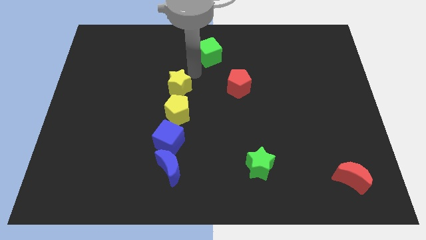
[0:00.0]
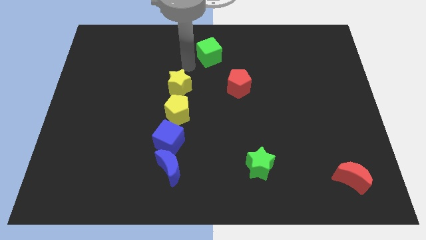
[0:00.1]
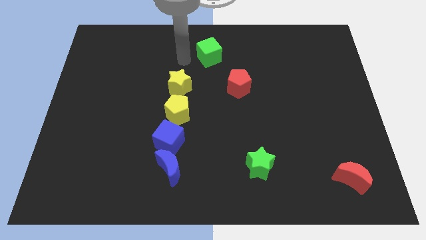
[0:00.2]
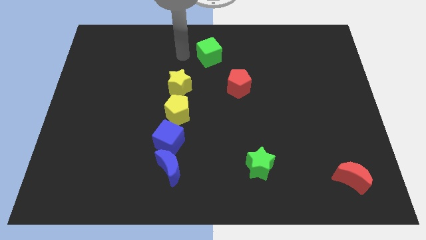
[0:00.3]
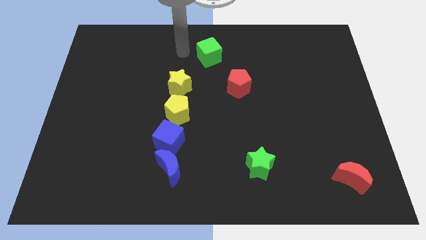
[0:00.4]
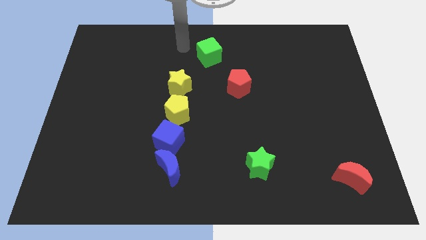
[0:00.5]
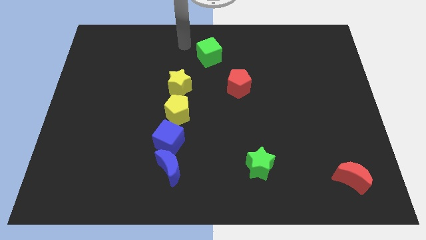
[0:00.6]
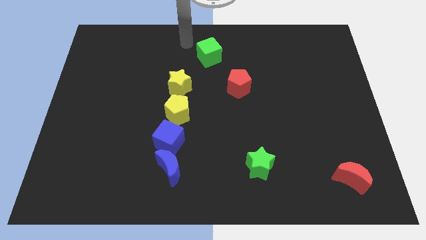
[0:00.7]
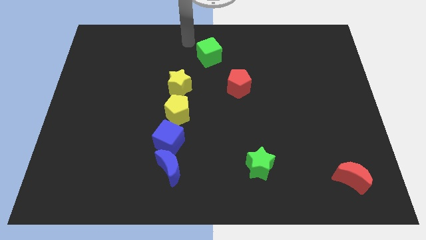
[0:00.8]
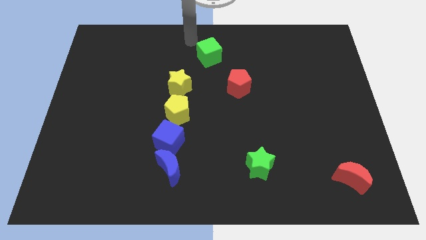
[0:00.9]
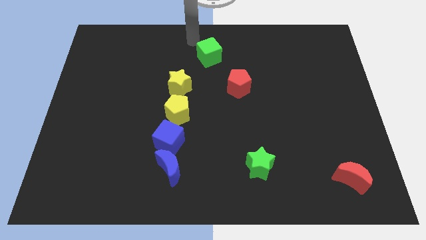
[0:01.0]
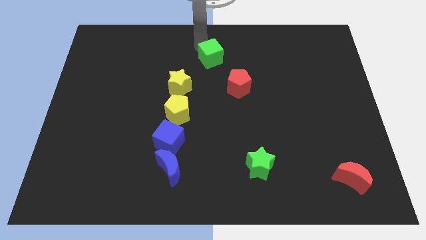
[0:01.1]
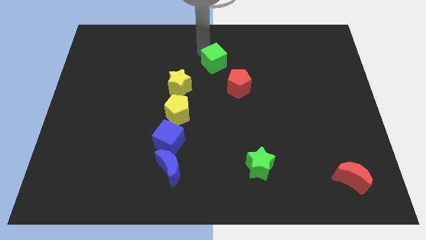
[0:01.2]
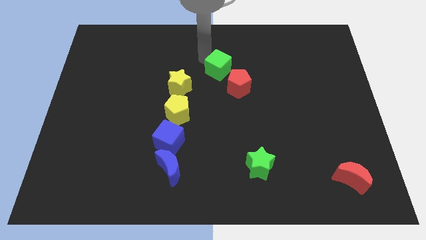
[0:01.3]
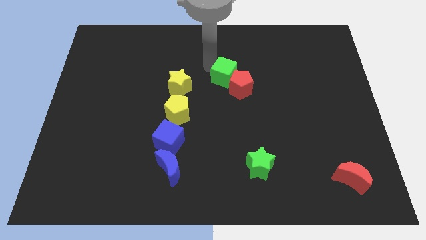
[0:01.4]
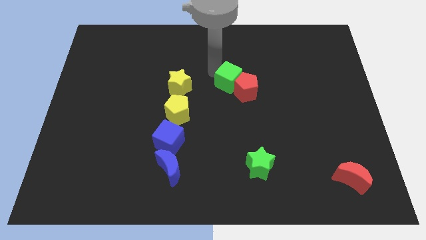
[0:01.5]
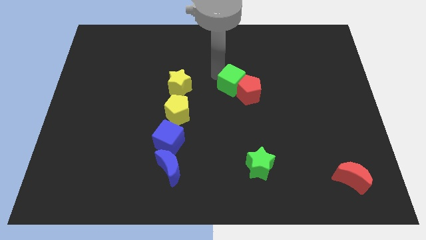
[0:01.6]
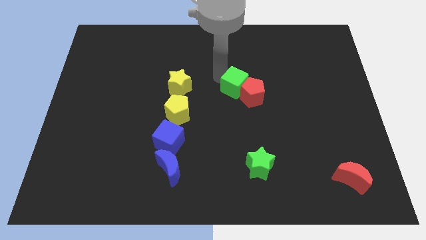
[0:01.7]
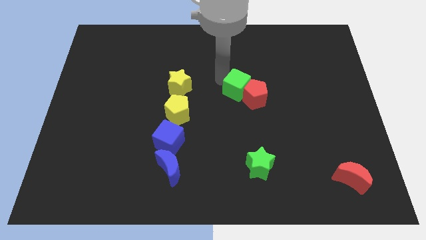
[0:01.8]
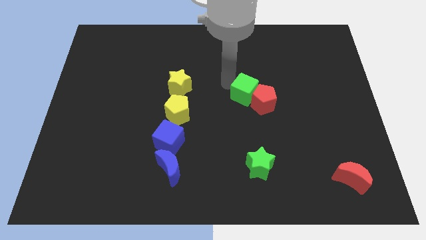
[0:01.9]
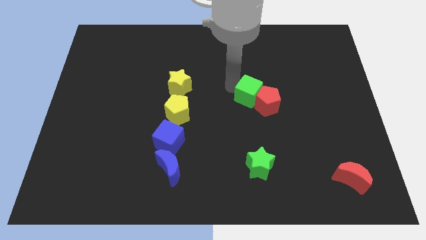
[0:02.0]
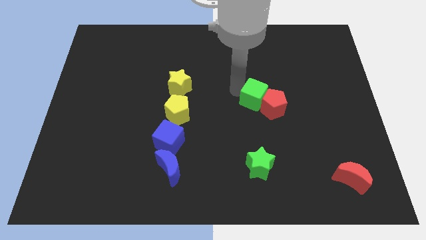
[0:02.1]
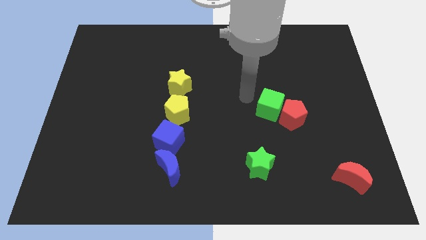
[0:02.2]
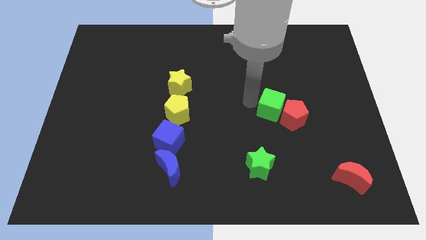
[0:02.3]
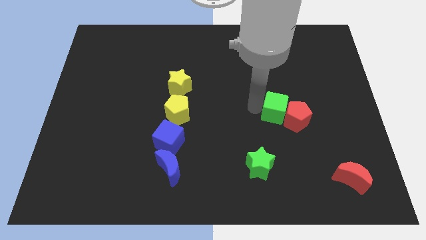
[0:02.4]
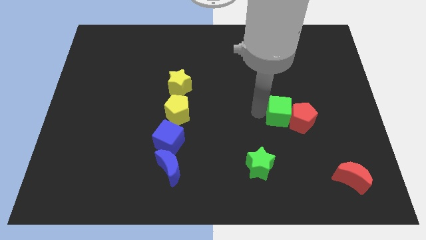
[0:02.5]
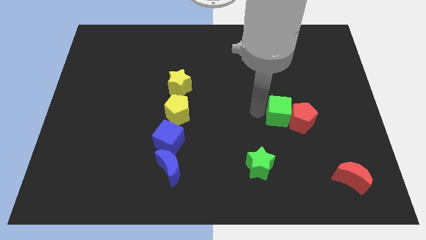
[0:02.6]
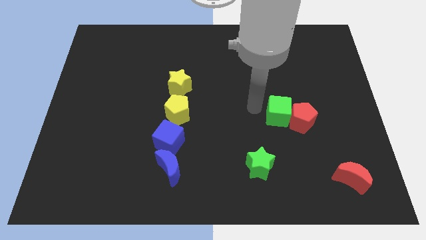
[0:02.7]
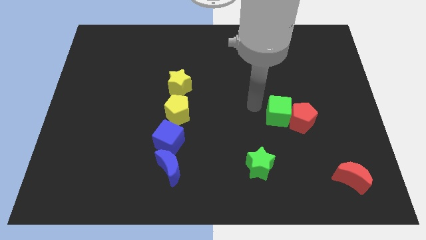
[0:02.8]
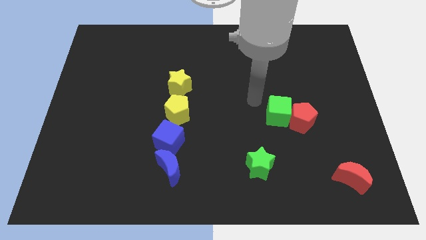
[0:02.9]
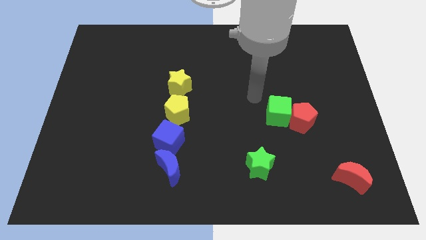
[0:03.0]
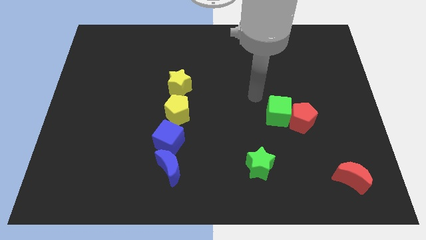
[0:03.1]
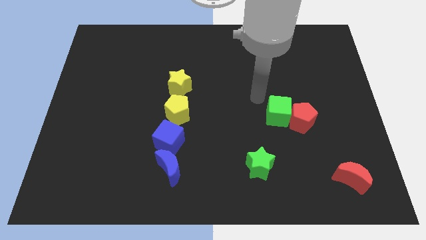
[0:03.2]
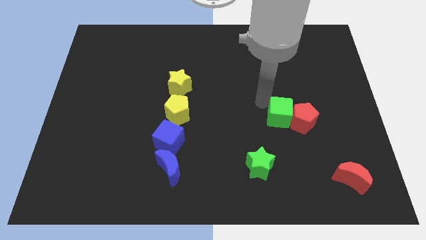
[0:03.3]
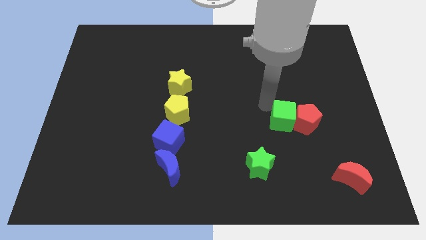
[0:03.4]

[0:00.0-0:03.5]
push the green cube into the red pentagon

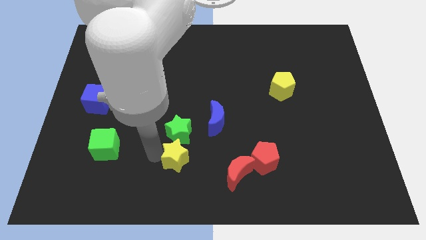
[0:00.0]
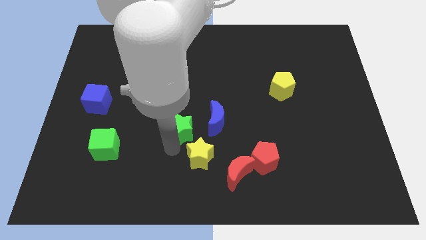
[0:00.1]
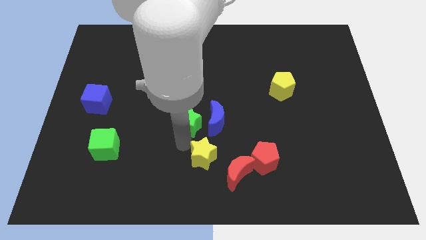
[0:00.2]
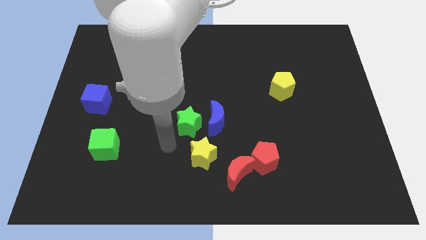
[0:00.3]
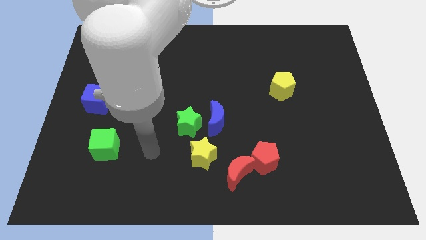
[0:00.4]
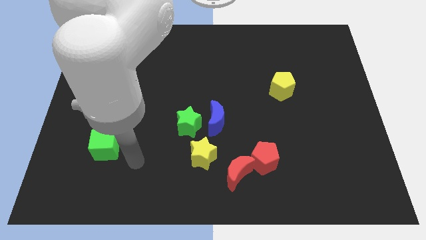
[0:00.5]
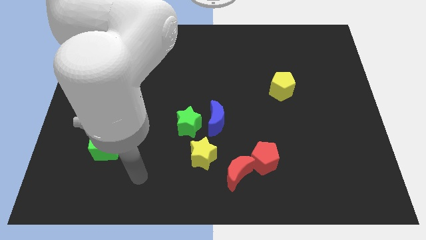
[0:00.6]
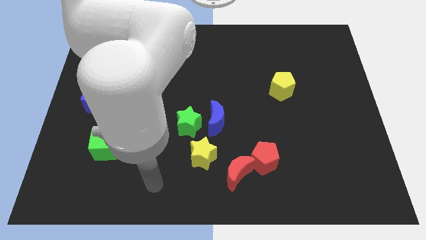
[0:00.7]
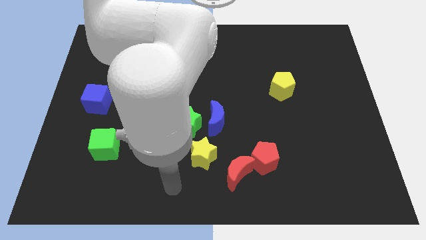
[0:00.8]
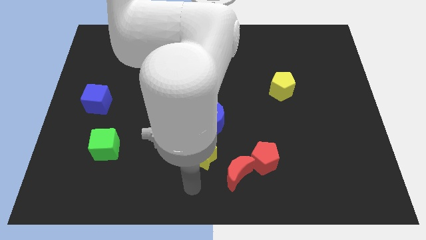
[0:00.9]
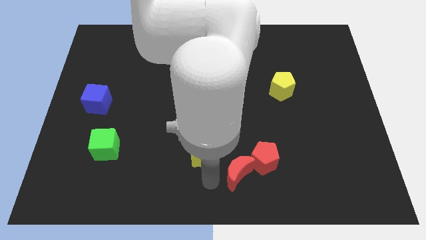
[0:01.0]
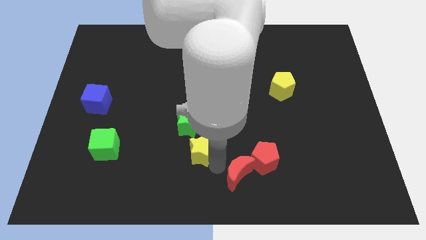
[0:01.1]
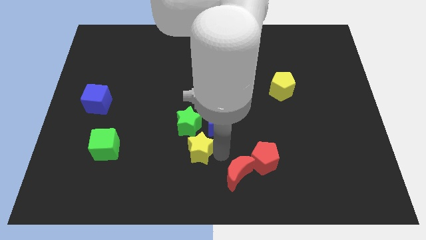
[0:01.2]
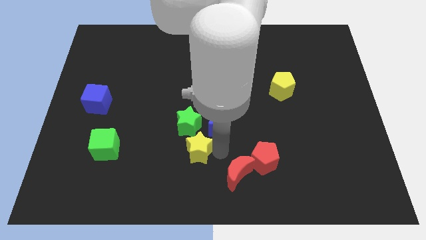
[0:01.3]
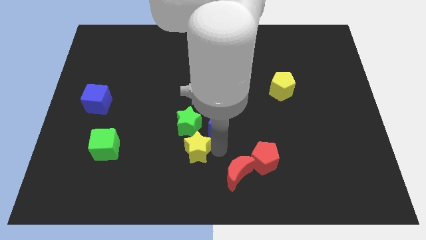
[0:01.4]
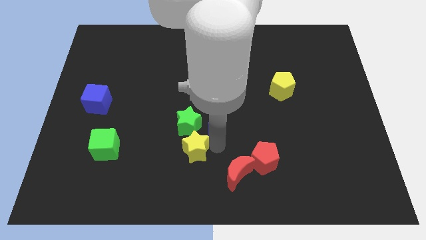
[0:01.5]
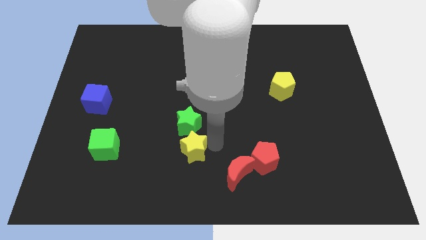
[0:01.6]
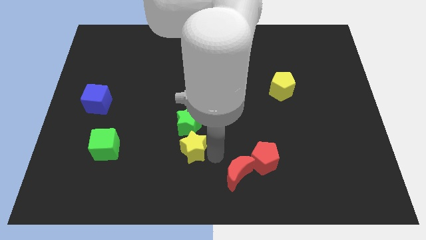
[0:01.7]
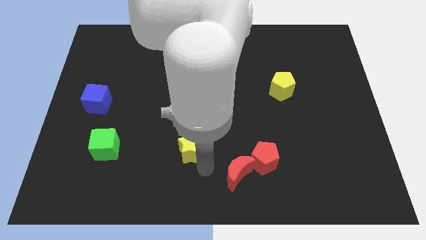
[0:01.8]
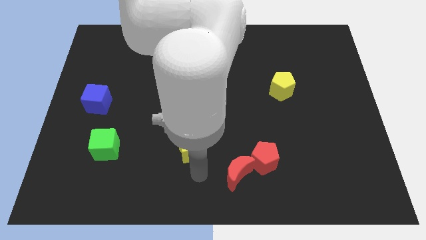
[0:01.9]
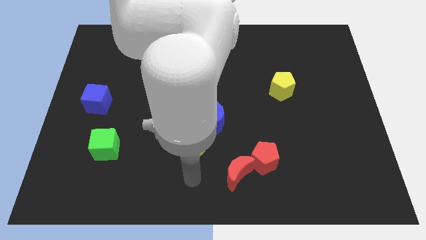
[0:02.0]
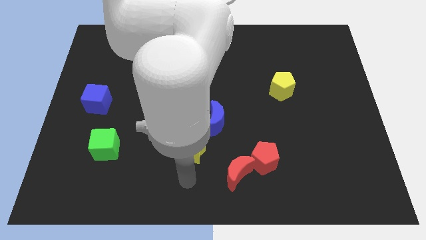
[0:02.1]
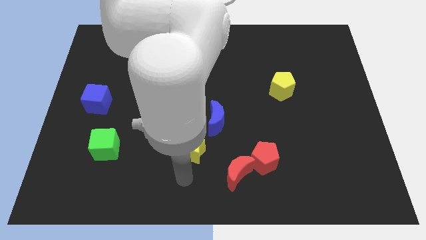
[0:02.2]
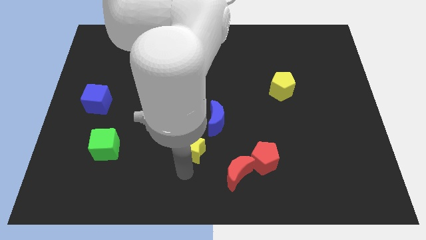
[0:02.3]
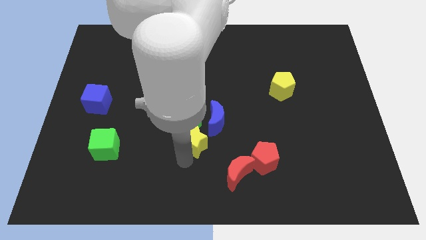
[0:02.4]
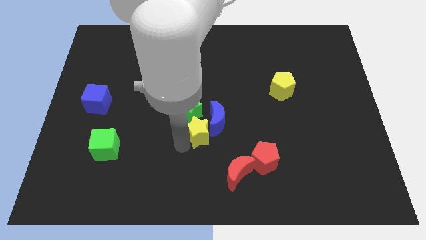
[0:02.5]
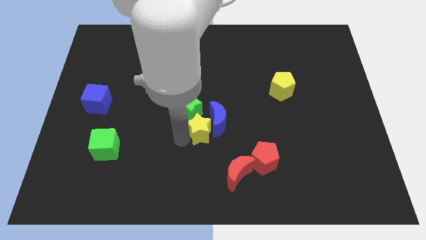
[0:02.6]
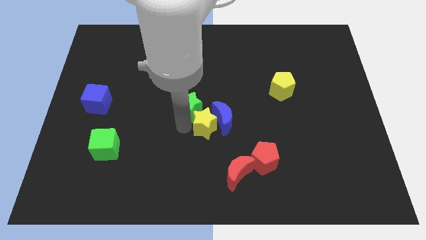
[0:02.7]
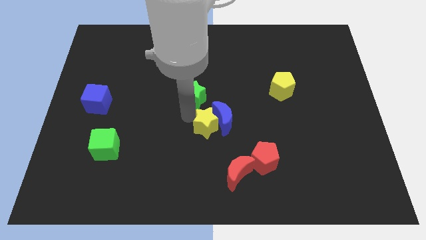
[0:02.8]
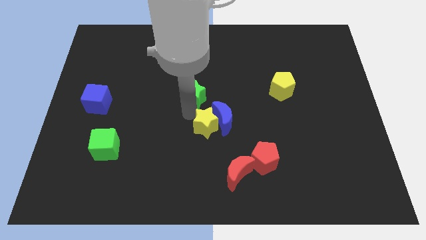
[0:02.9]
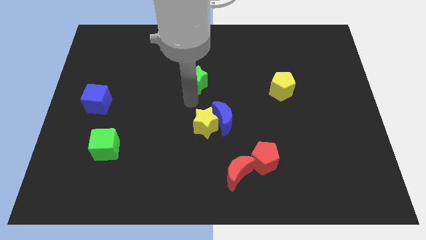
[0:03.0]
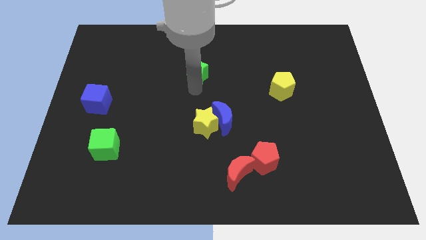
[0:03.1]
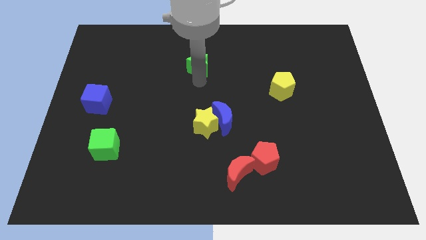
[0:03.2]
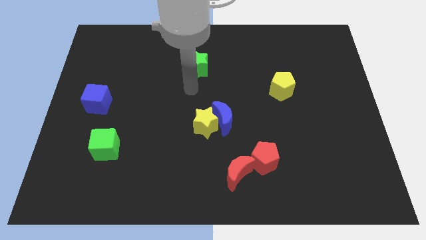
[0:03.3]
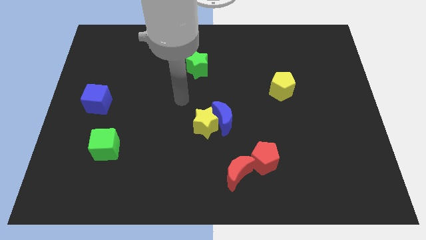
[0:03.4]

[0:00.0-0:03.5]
move the stars towards top center of the board

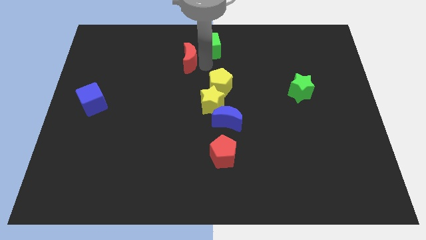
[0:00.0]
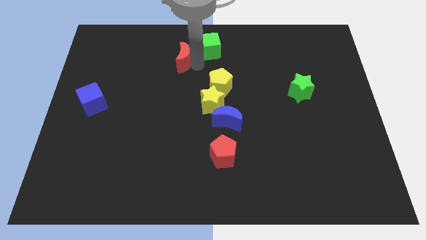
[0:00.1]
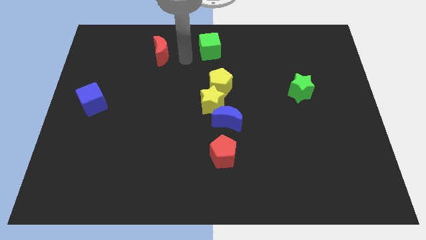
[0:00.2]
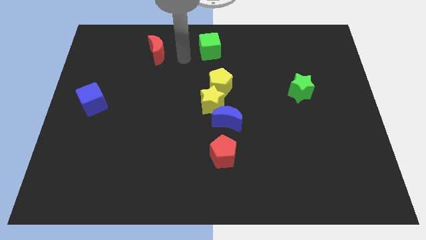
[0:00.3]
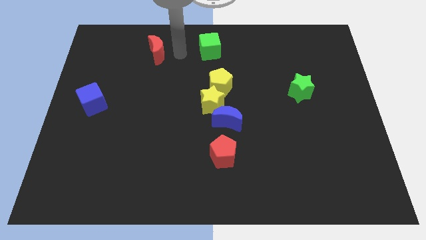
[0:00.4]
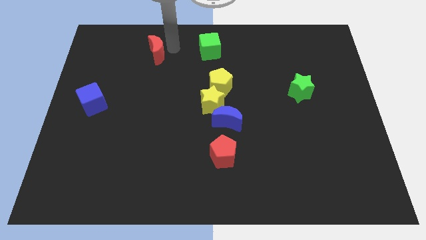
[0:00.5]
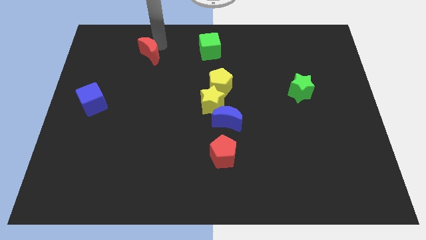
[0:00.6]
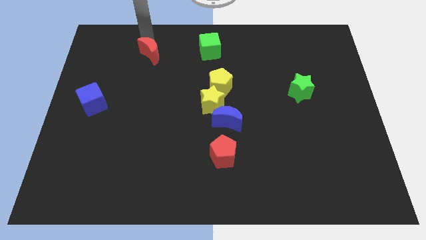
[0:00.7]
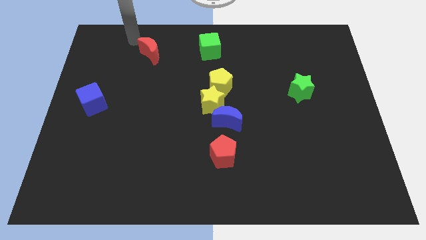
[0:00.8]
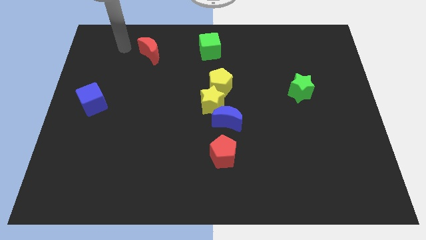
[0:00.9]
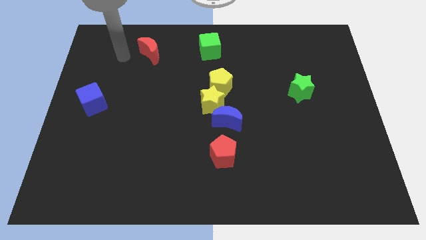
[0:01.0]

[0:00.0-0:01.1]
separate the red crescent from the green cube

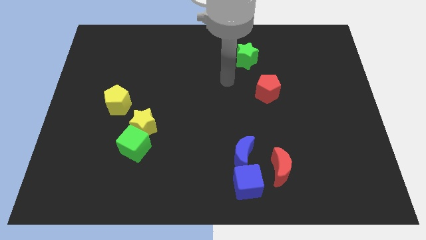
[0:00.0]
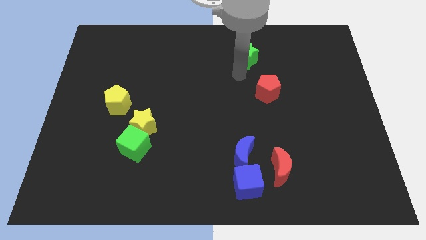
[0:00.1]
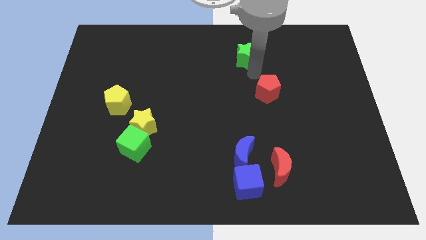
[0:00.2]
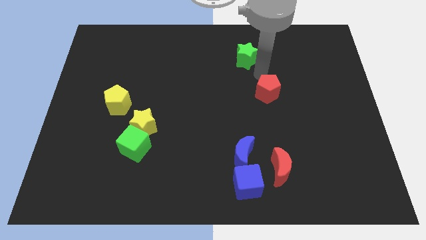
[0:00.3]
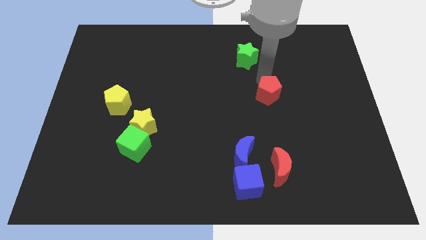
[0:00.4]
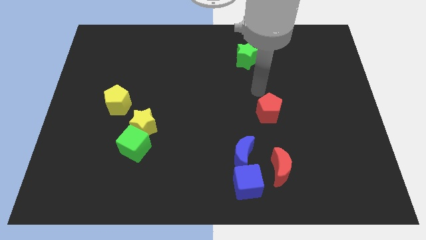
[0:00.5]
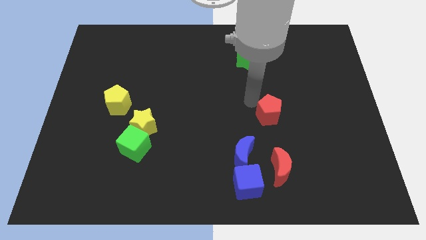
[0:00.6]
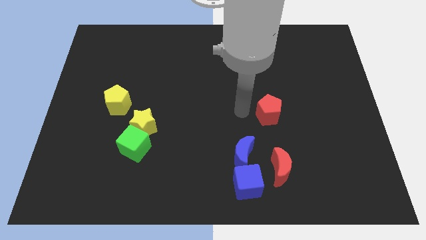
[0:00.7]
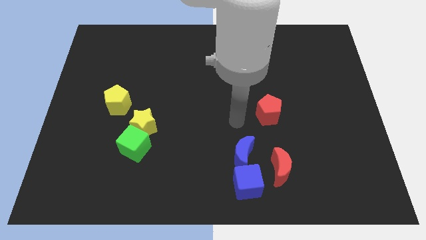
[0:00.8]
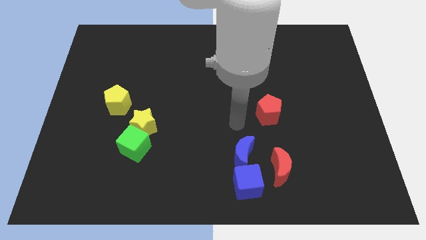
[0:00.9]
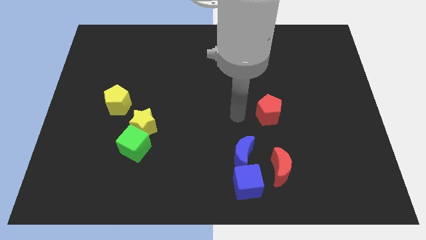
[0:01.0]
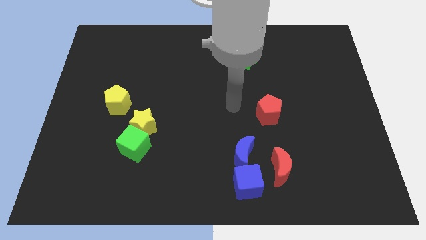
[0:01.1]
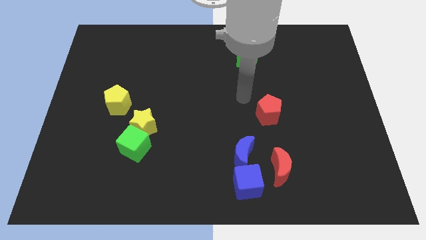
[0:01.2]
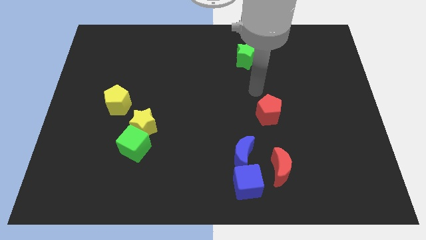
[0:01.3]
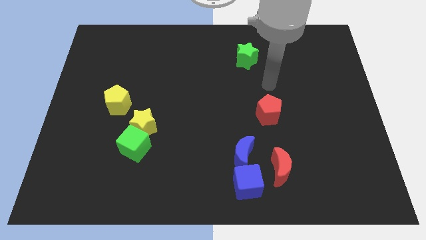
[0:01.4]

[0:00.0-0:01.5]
place the red pentagon vertically above the red crescent
